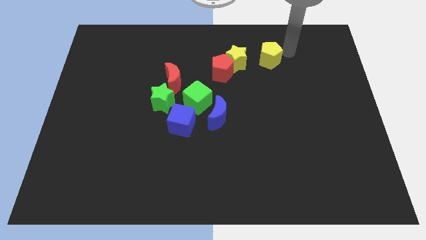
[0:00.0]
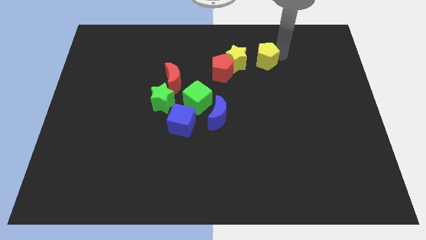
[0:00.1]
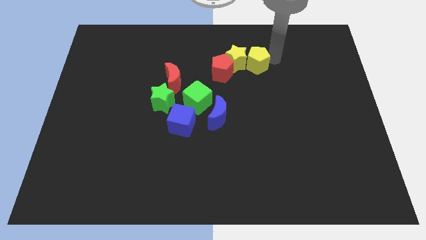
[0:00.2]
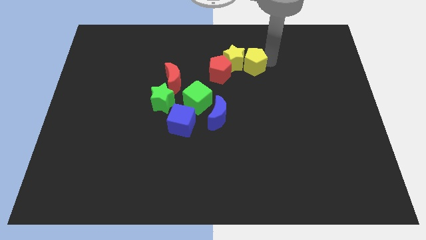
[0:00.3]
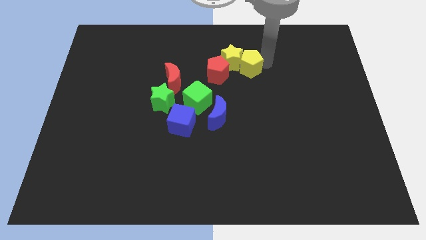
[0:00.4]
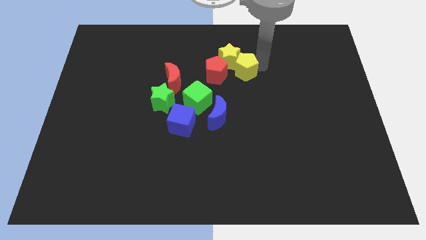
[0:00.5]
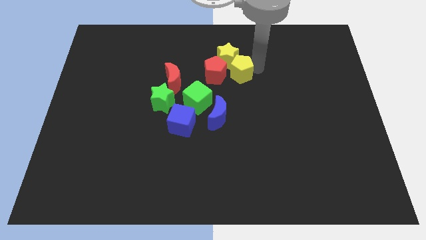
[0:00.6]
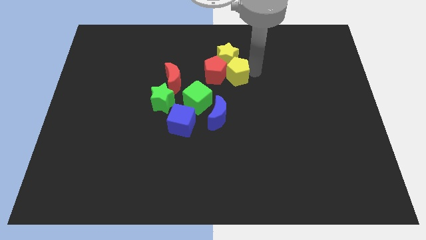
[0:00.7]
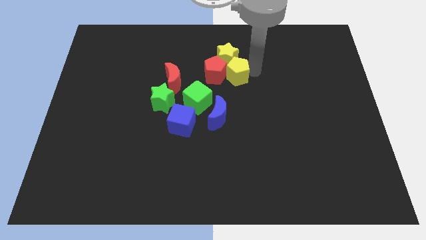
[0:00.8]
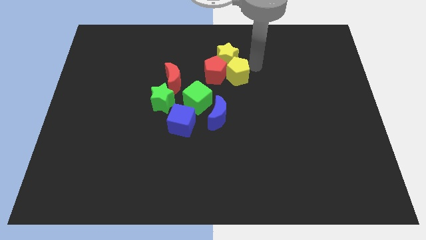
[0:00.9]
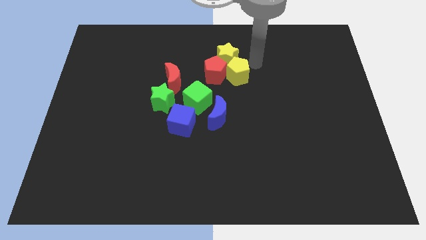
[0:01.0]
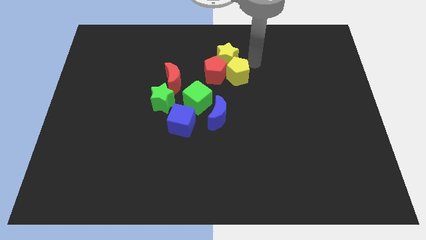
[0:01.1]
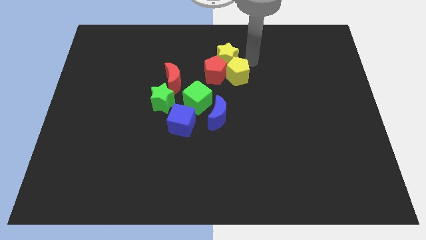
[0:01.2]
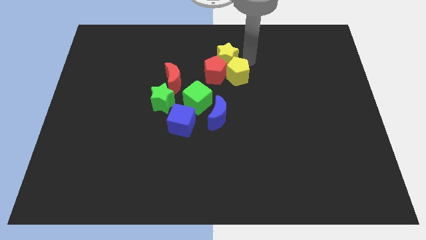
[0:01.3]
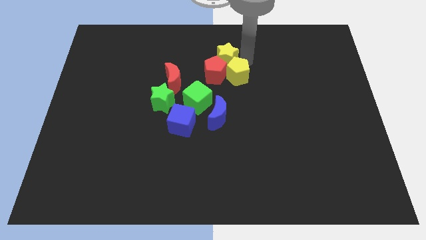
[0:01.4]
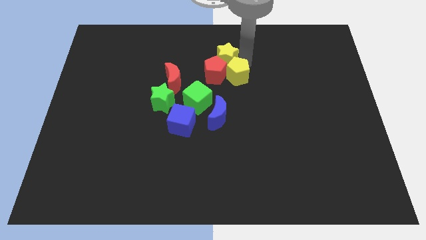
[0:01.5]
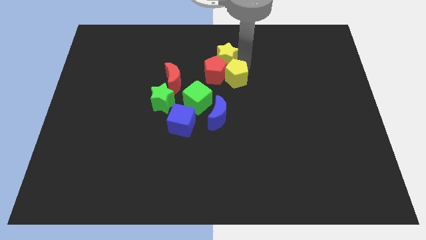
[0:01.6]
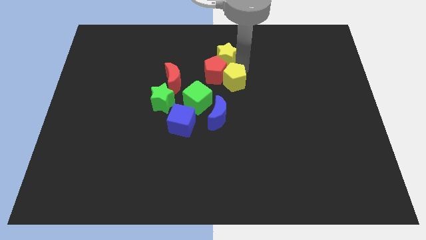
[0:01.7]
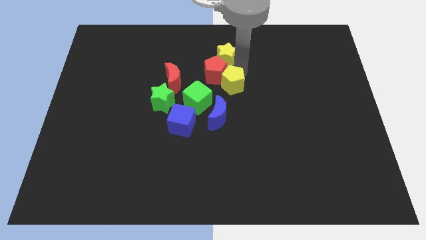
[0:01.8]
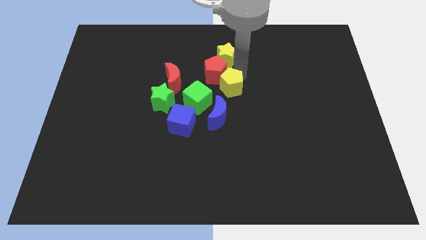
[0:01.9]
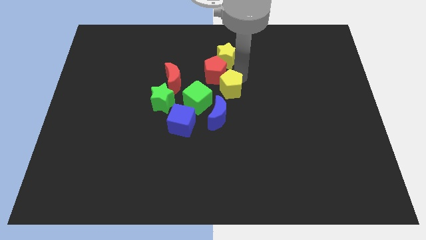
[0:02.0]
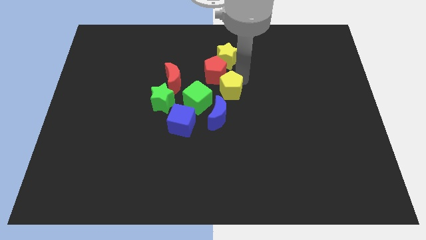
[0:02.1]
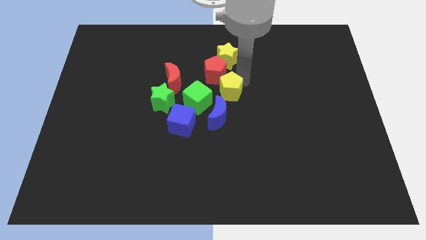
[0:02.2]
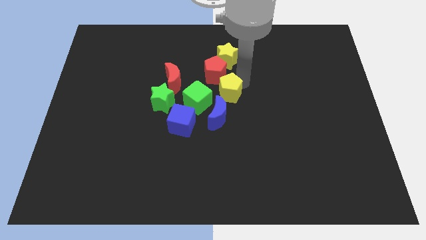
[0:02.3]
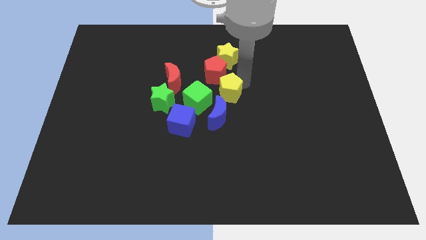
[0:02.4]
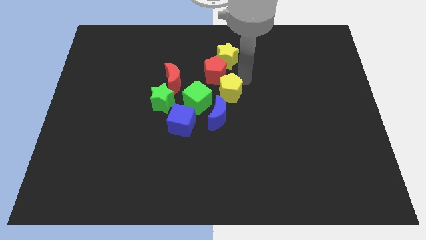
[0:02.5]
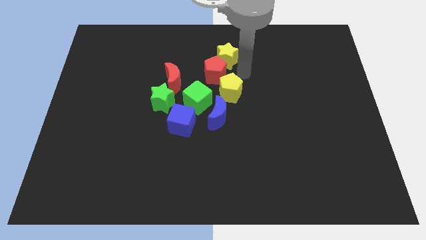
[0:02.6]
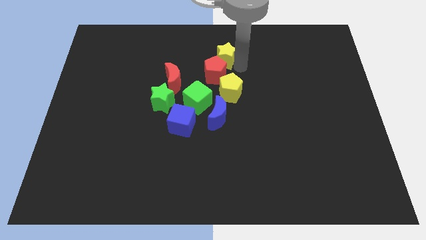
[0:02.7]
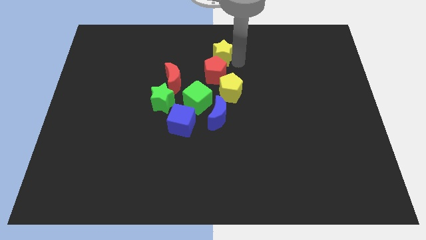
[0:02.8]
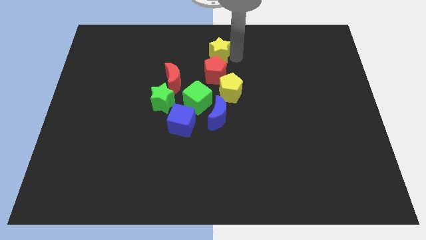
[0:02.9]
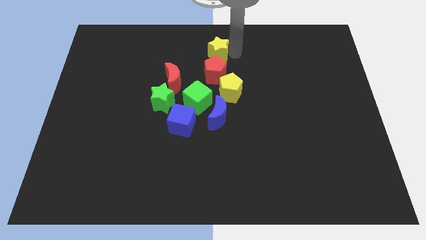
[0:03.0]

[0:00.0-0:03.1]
move the yellow pentagon to the top right of the blue moon

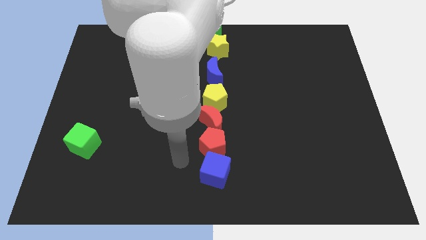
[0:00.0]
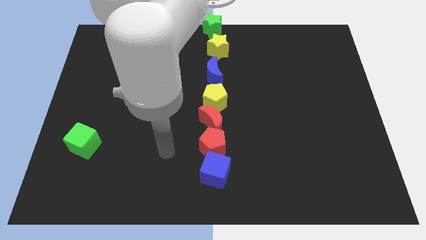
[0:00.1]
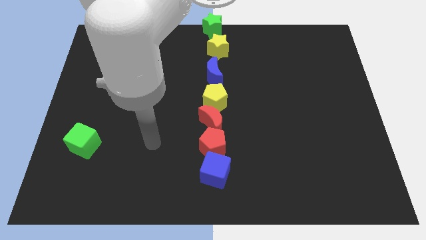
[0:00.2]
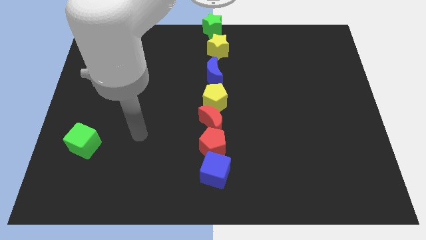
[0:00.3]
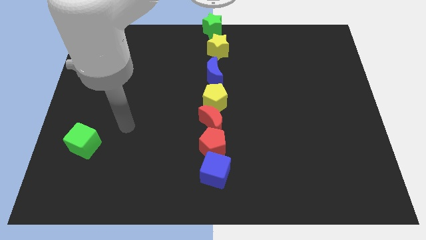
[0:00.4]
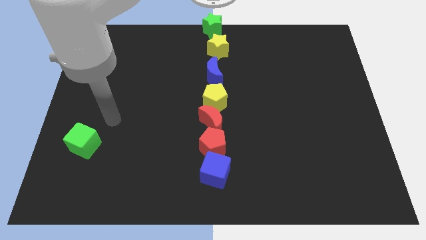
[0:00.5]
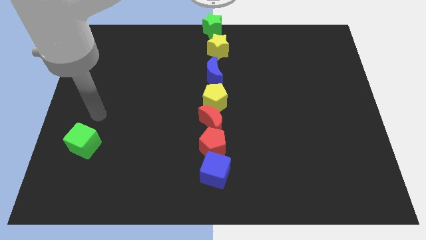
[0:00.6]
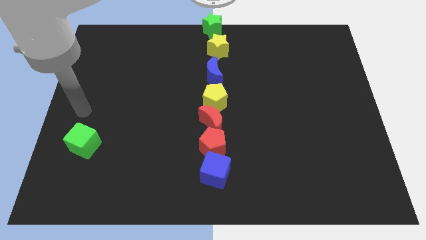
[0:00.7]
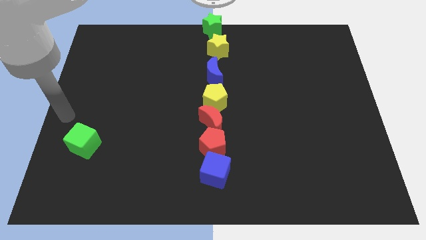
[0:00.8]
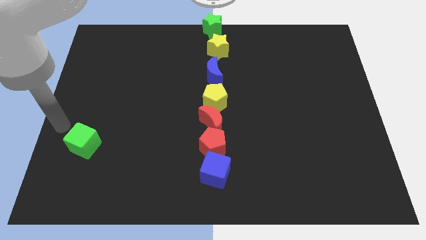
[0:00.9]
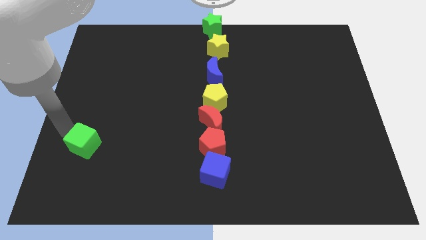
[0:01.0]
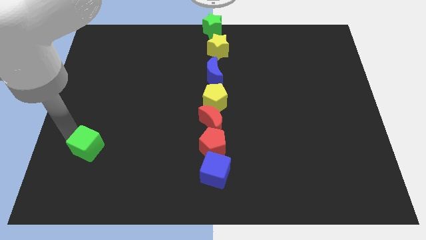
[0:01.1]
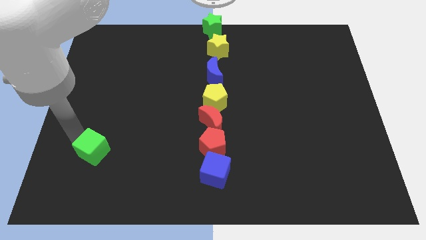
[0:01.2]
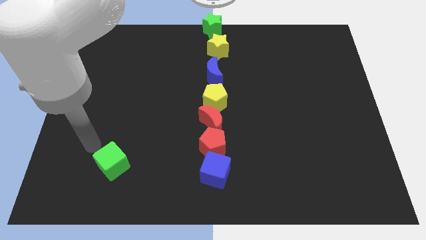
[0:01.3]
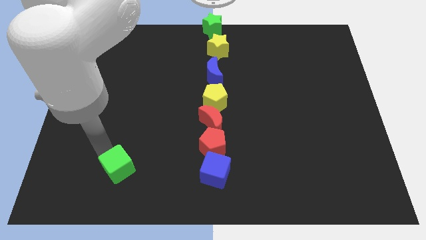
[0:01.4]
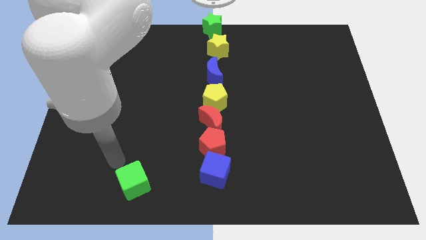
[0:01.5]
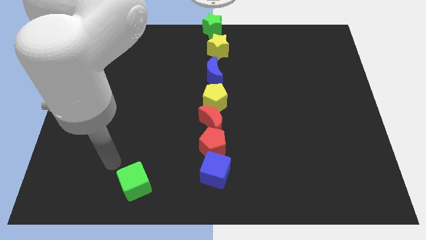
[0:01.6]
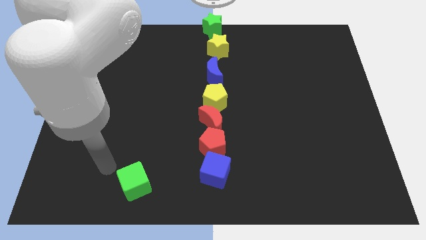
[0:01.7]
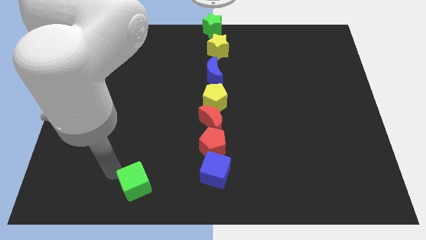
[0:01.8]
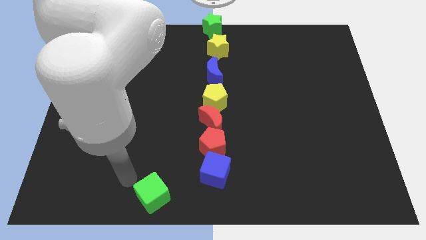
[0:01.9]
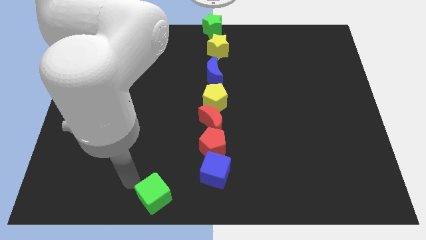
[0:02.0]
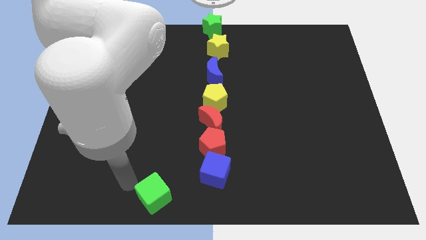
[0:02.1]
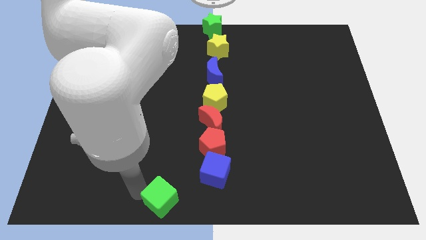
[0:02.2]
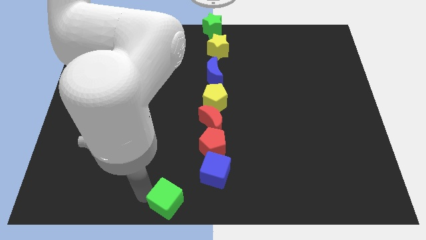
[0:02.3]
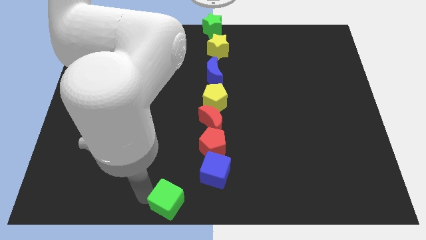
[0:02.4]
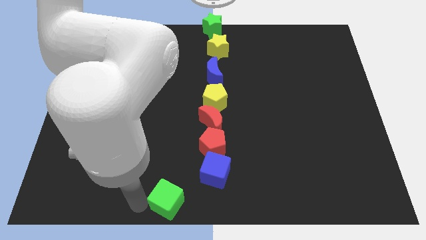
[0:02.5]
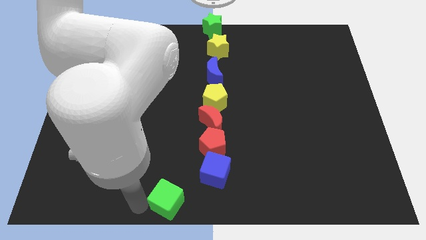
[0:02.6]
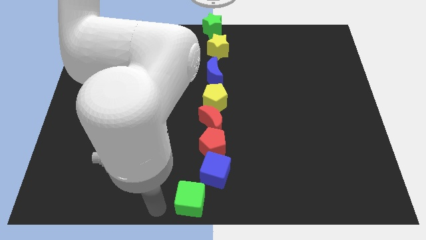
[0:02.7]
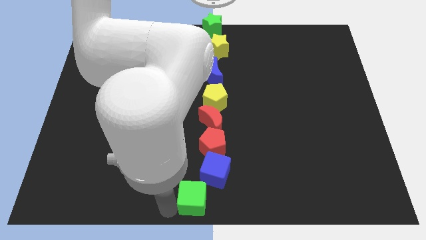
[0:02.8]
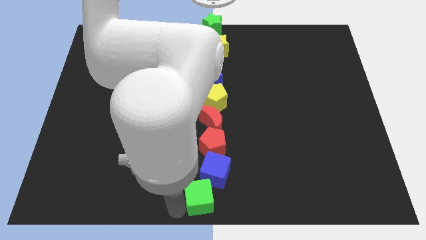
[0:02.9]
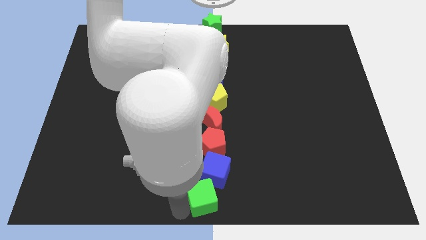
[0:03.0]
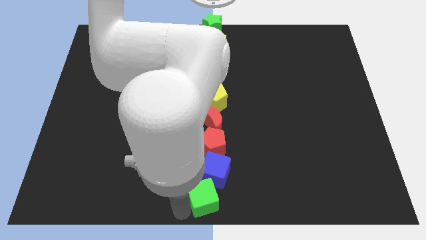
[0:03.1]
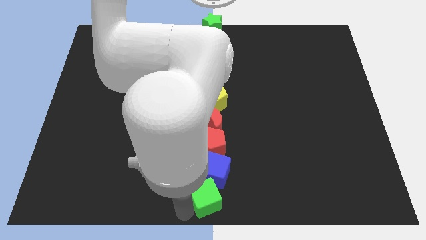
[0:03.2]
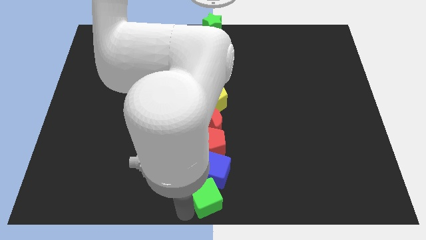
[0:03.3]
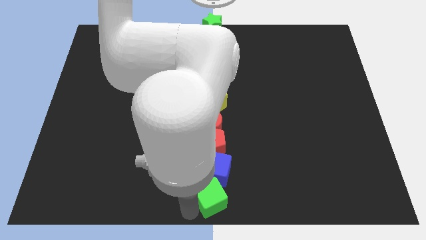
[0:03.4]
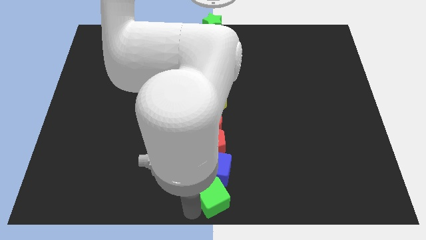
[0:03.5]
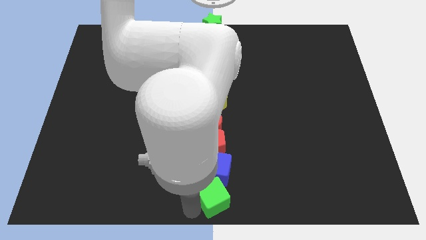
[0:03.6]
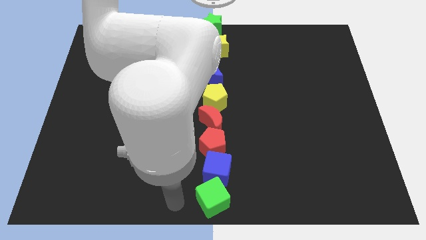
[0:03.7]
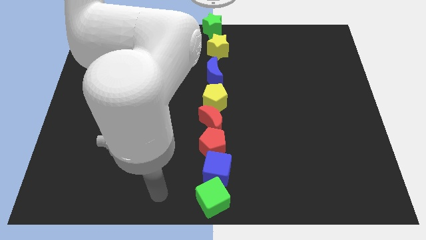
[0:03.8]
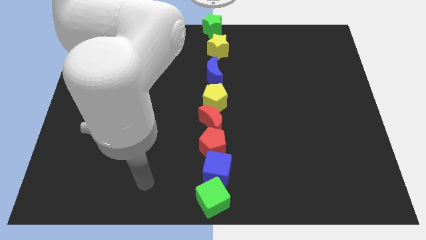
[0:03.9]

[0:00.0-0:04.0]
put the green cube at the bottom center of the board

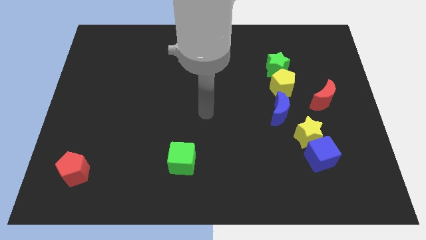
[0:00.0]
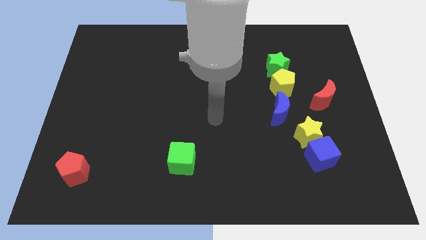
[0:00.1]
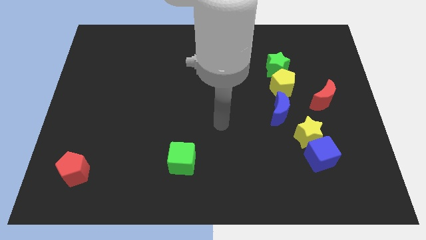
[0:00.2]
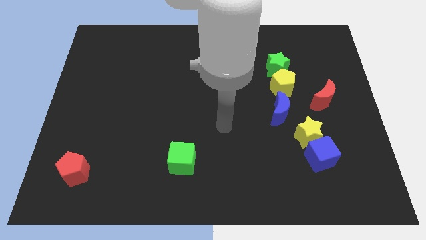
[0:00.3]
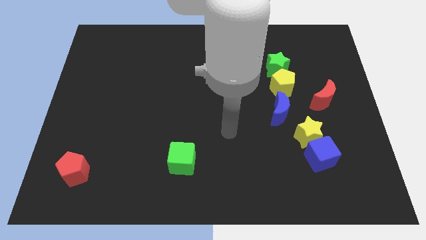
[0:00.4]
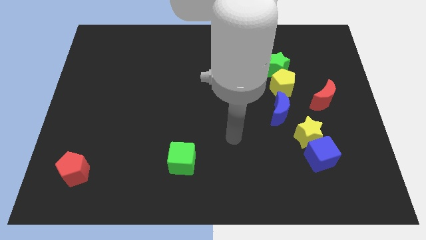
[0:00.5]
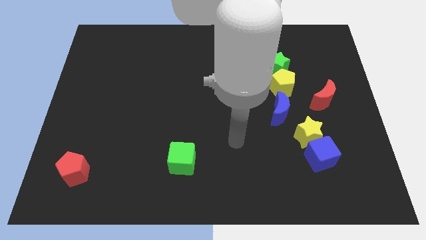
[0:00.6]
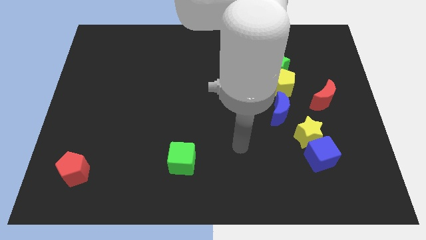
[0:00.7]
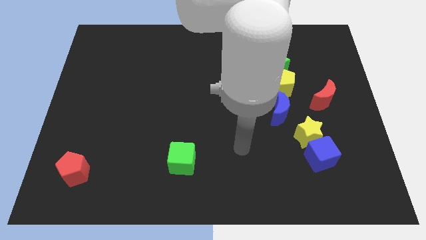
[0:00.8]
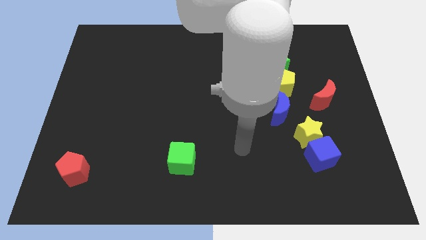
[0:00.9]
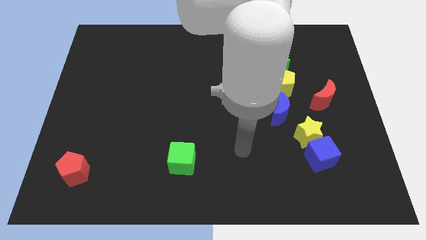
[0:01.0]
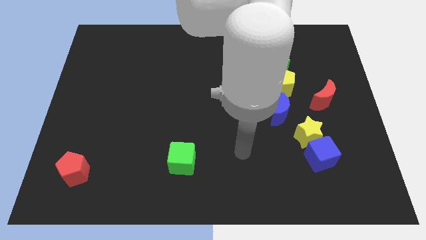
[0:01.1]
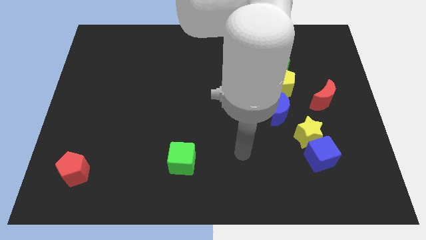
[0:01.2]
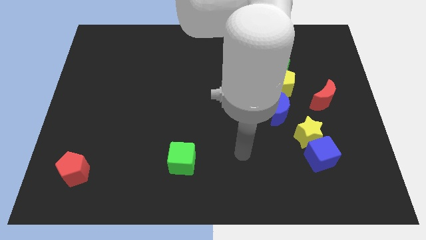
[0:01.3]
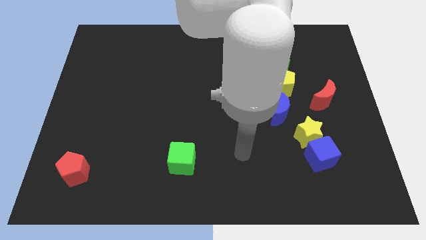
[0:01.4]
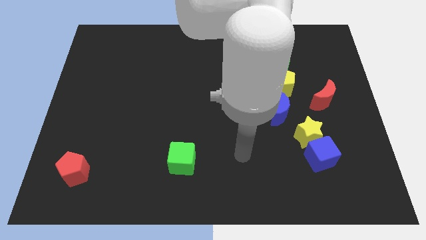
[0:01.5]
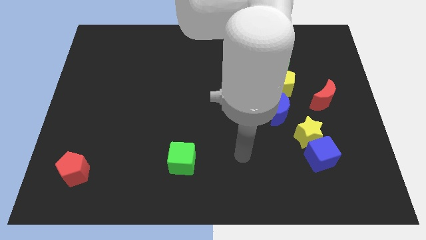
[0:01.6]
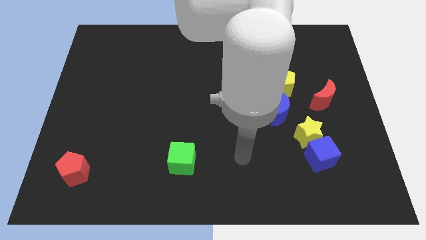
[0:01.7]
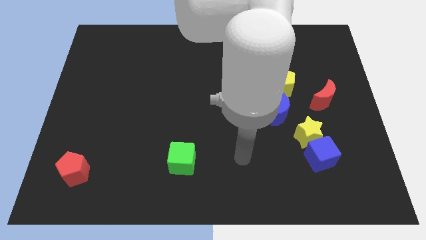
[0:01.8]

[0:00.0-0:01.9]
point your arm to the right of the green cube
